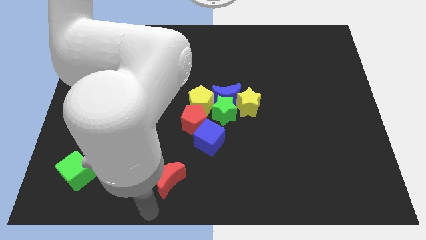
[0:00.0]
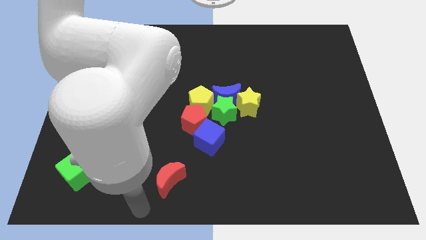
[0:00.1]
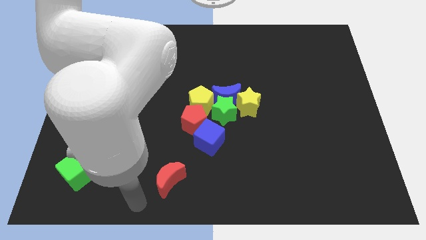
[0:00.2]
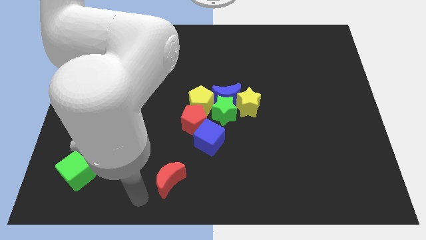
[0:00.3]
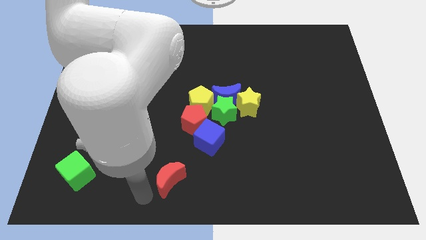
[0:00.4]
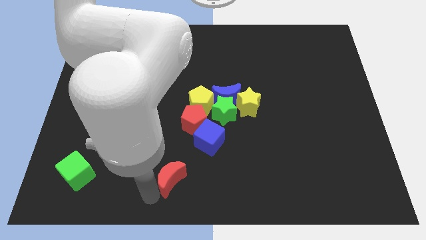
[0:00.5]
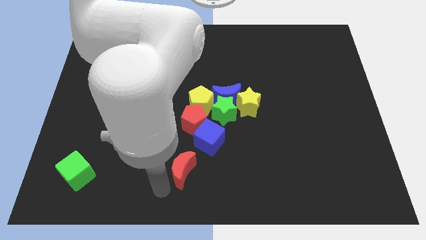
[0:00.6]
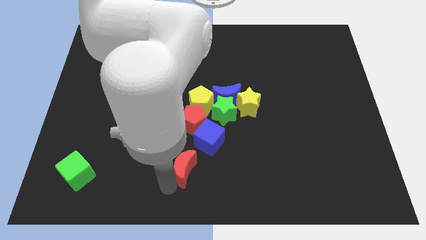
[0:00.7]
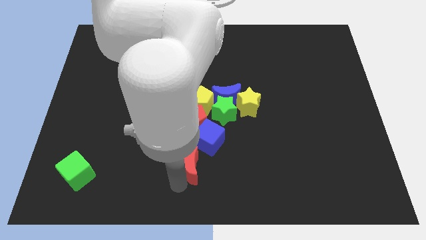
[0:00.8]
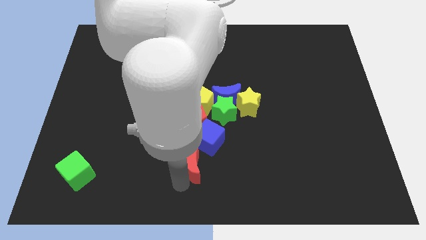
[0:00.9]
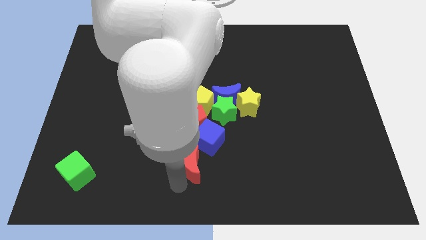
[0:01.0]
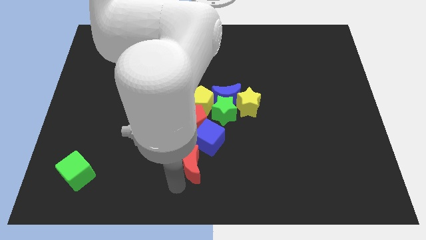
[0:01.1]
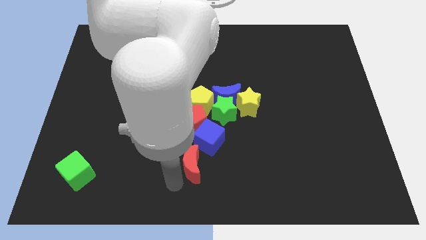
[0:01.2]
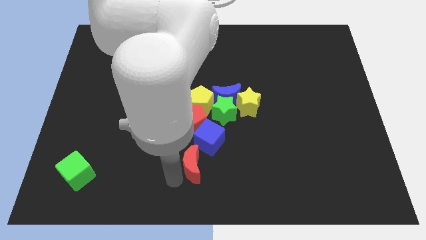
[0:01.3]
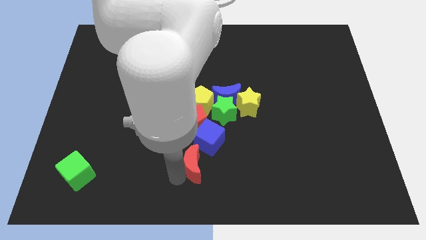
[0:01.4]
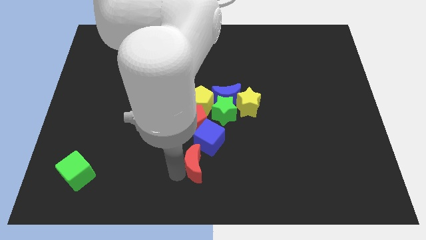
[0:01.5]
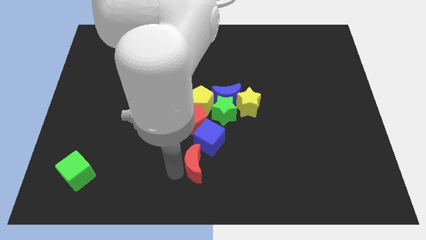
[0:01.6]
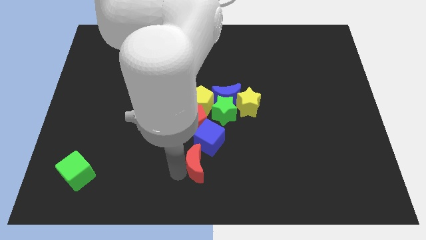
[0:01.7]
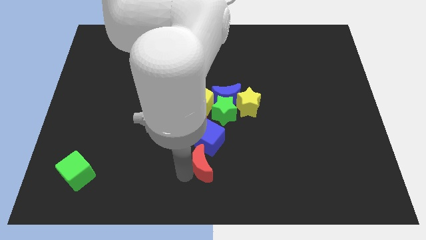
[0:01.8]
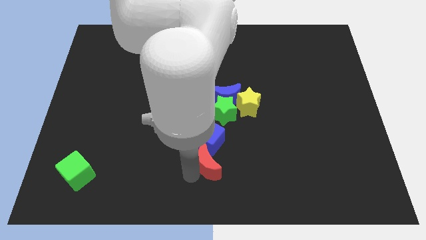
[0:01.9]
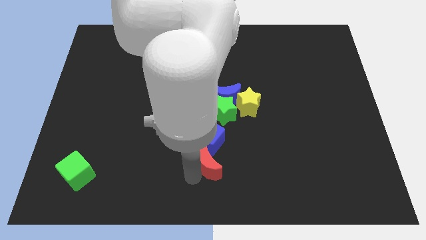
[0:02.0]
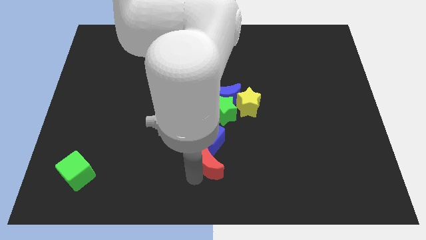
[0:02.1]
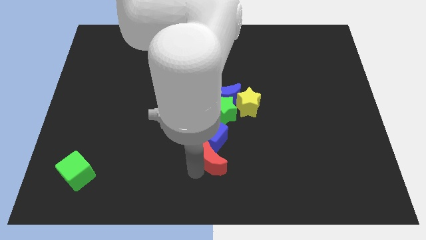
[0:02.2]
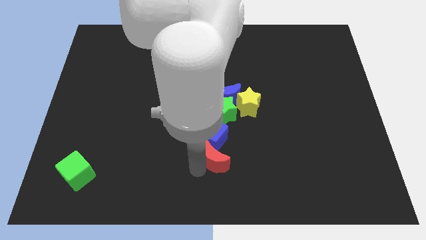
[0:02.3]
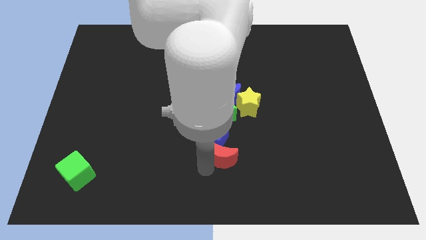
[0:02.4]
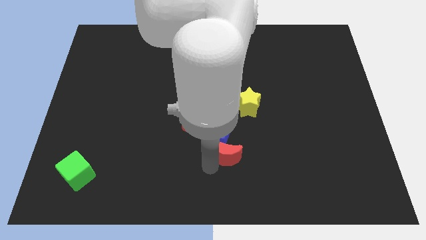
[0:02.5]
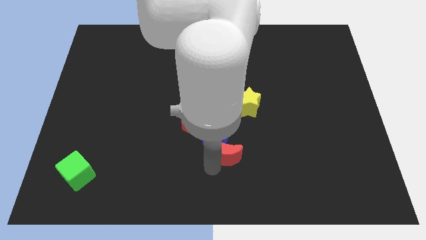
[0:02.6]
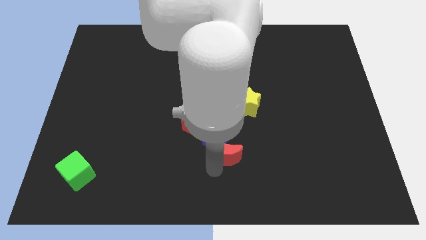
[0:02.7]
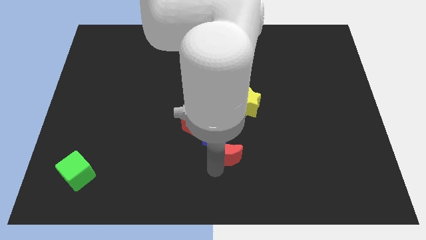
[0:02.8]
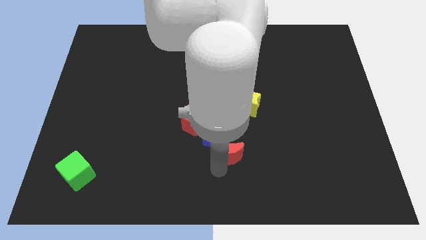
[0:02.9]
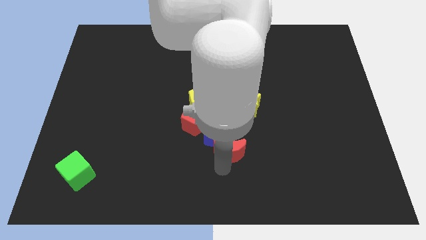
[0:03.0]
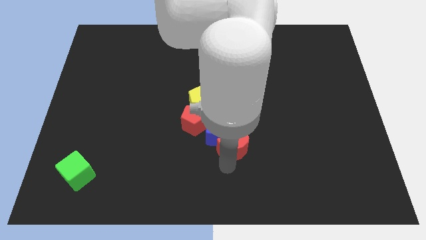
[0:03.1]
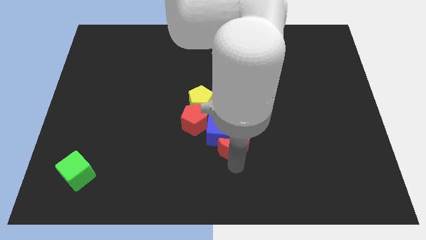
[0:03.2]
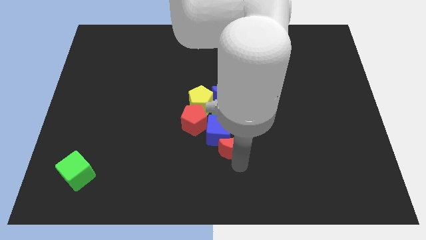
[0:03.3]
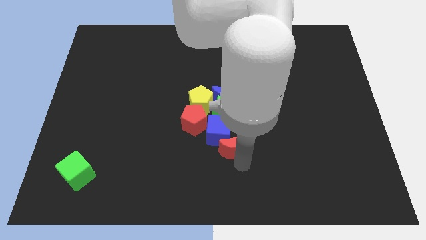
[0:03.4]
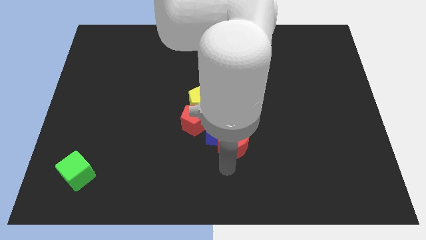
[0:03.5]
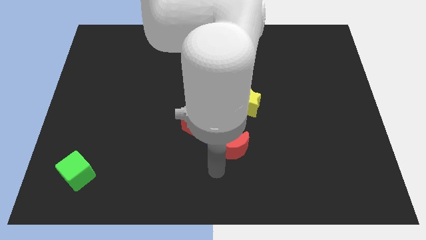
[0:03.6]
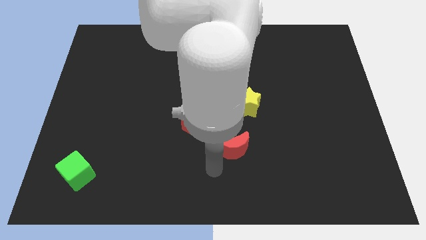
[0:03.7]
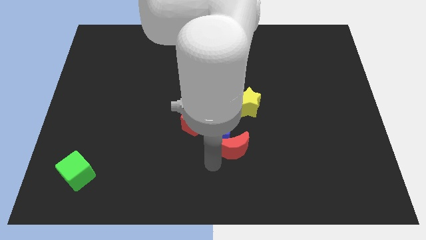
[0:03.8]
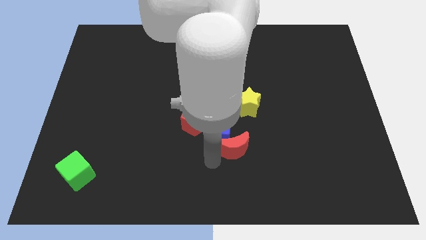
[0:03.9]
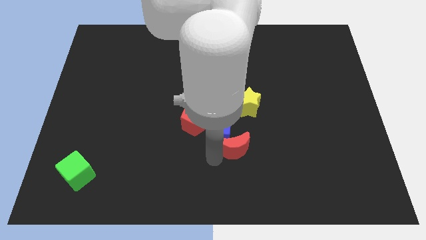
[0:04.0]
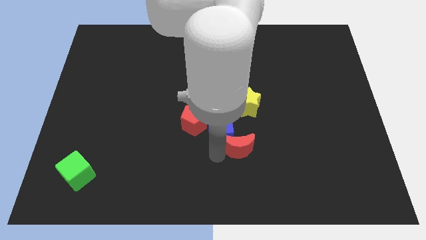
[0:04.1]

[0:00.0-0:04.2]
move the red crescent into the blue cube

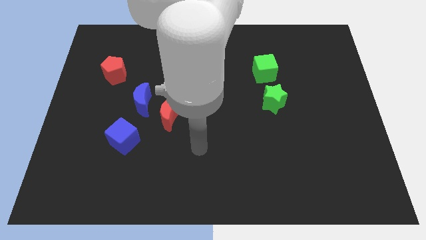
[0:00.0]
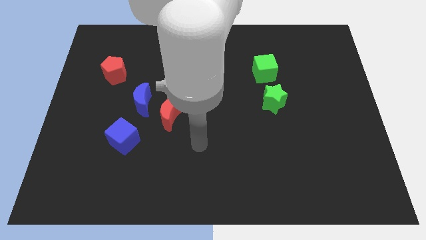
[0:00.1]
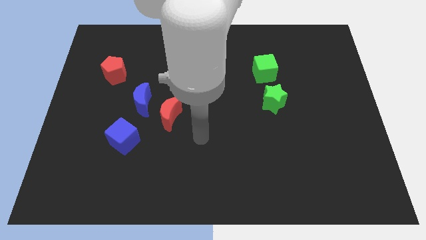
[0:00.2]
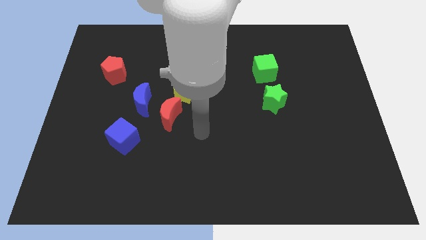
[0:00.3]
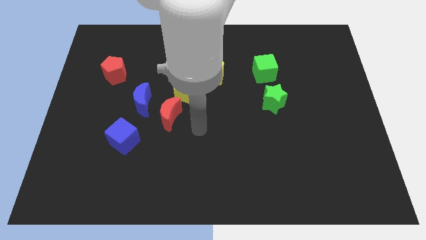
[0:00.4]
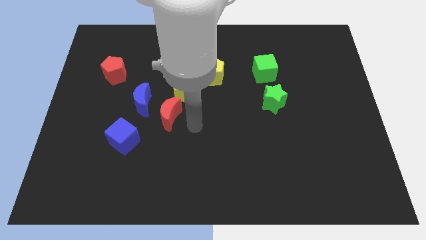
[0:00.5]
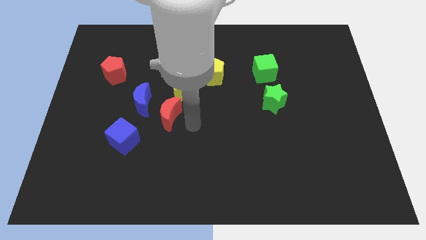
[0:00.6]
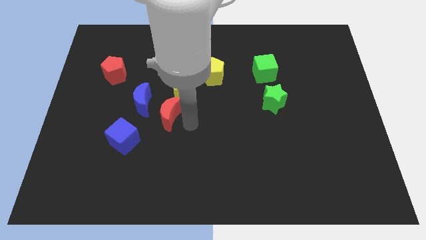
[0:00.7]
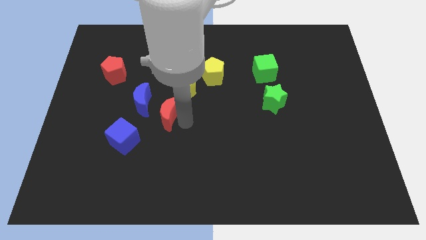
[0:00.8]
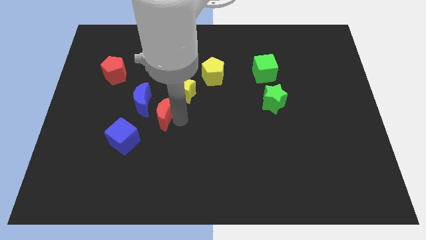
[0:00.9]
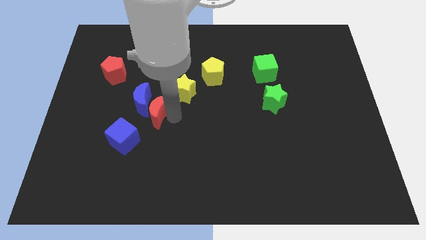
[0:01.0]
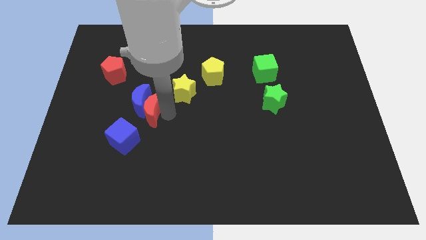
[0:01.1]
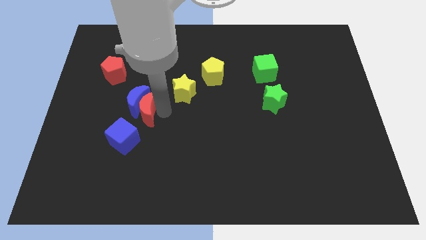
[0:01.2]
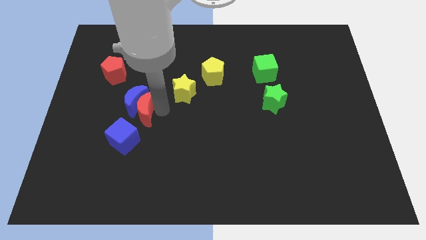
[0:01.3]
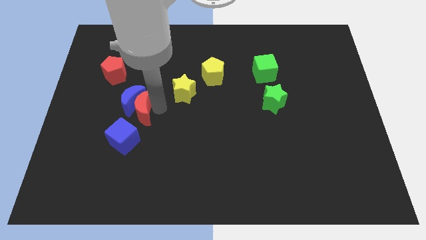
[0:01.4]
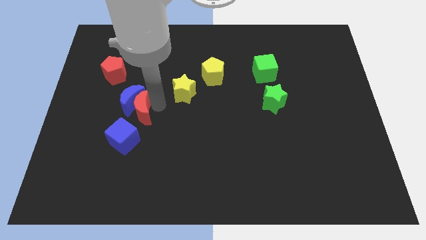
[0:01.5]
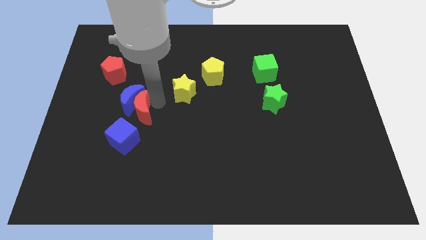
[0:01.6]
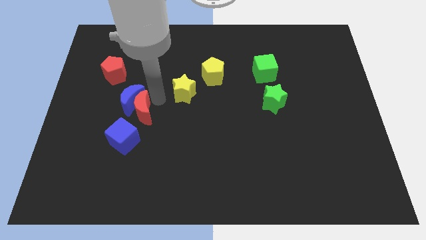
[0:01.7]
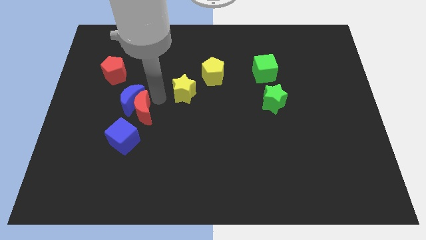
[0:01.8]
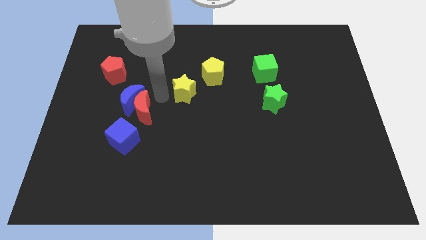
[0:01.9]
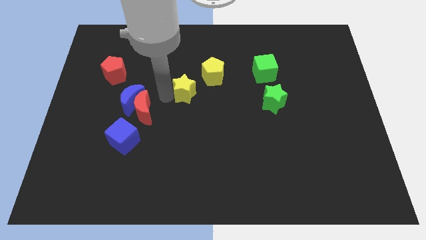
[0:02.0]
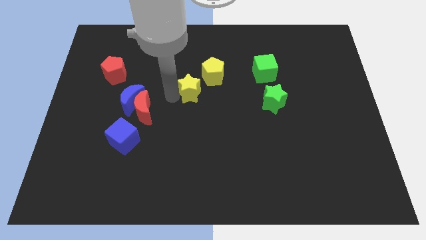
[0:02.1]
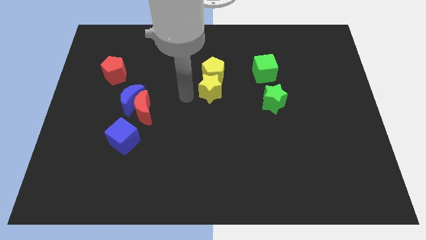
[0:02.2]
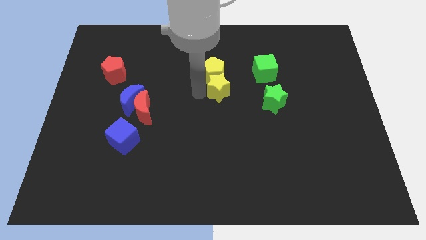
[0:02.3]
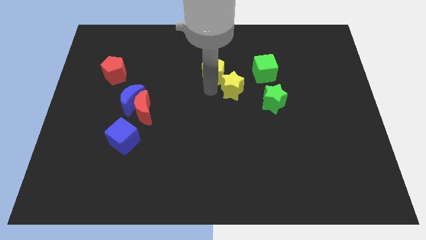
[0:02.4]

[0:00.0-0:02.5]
push yellow star towards green ueb

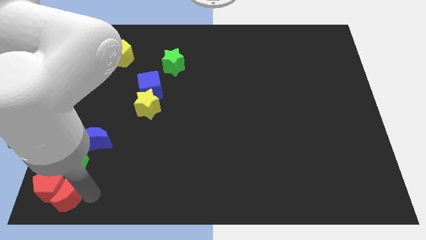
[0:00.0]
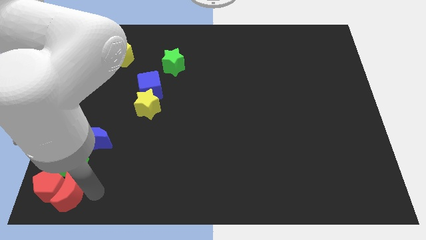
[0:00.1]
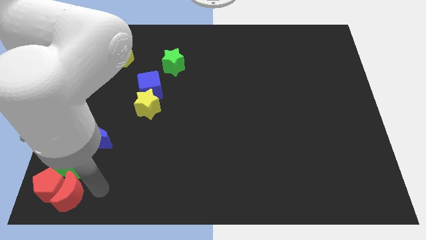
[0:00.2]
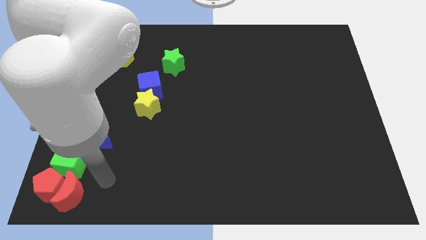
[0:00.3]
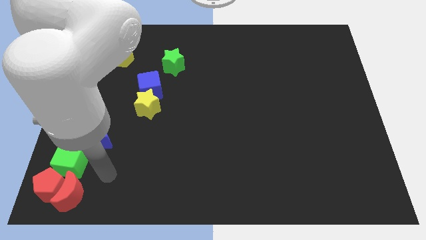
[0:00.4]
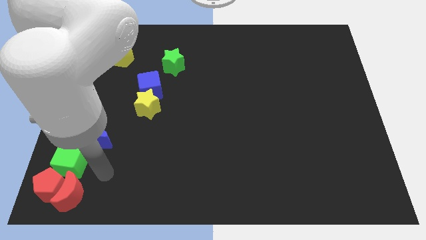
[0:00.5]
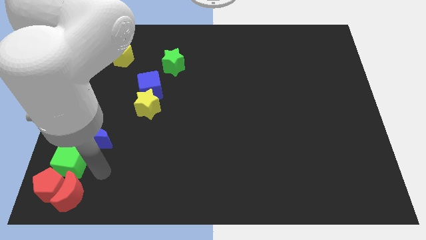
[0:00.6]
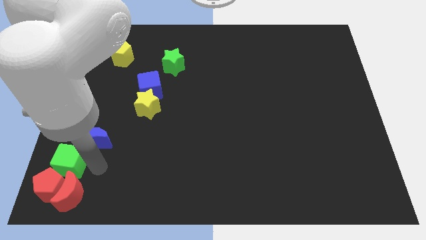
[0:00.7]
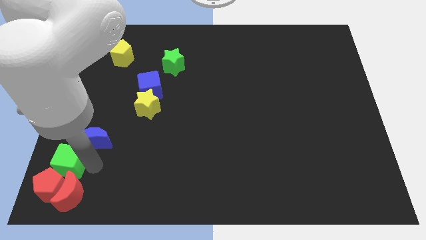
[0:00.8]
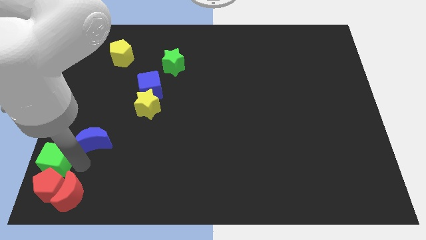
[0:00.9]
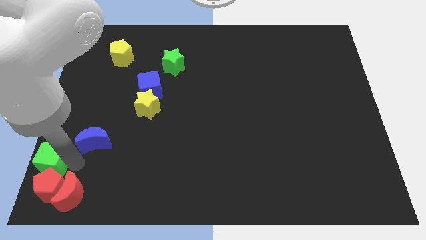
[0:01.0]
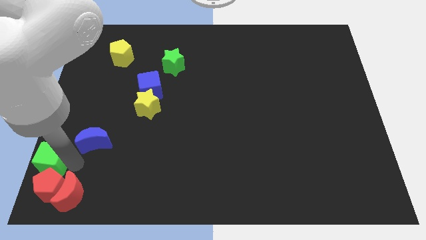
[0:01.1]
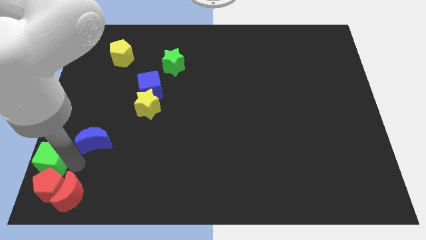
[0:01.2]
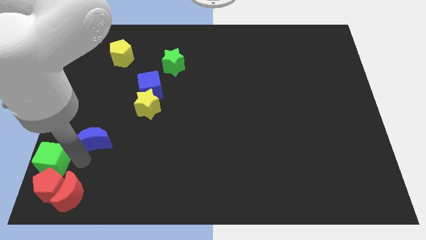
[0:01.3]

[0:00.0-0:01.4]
place green cube to the top of the red pentagon

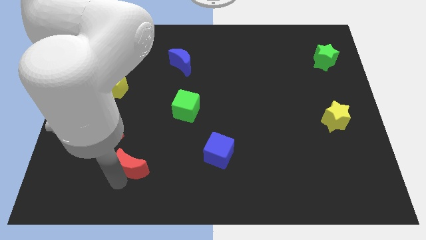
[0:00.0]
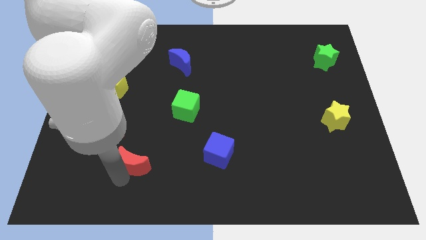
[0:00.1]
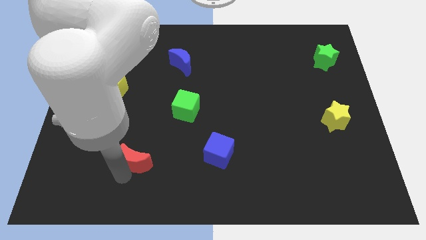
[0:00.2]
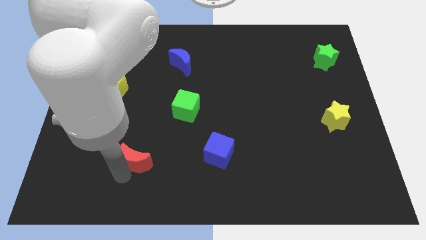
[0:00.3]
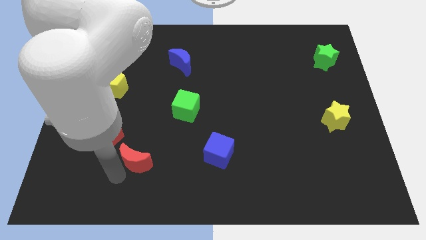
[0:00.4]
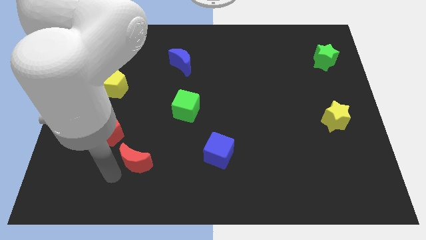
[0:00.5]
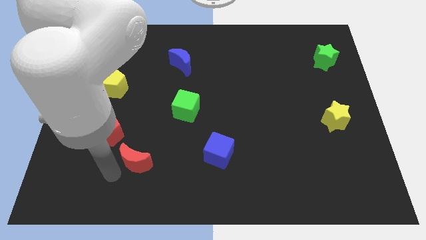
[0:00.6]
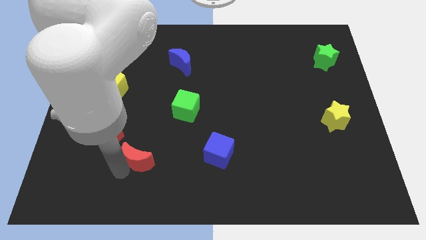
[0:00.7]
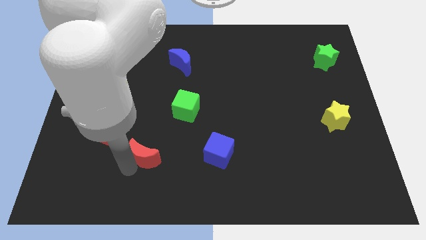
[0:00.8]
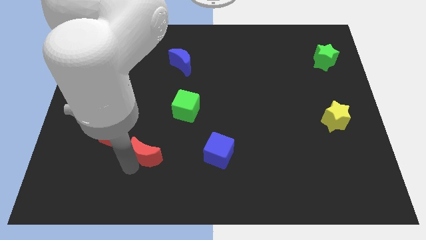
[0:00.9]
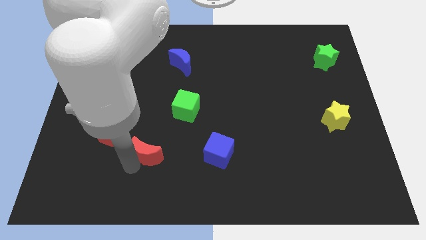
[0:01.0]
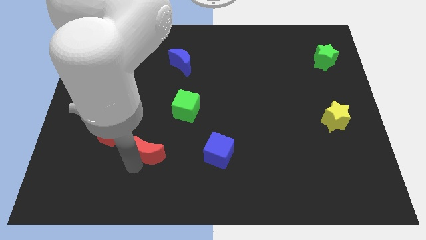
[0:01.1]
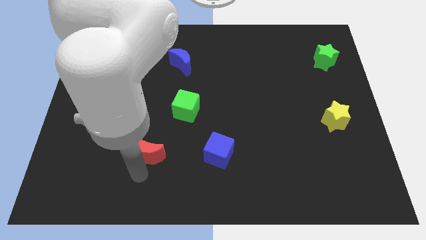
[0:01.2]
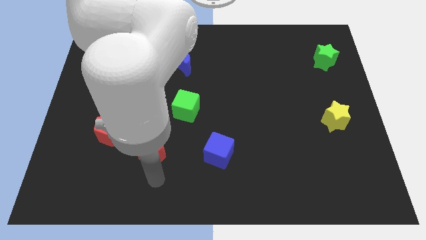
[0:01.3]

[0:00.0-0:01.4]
place the red moon left to the blue cube
